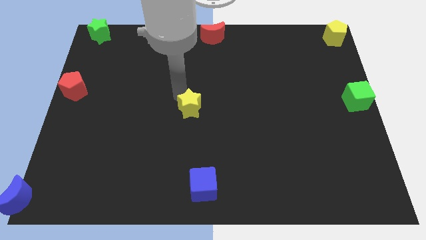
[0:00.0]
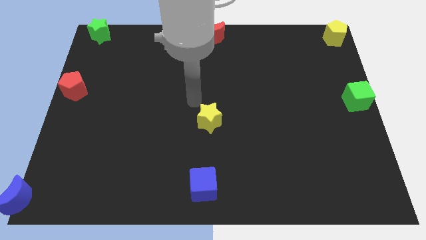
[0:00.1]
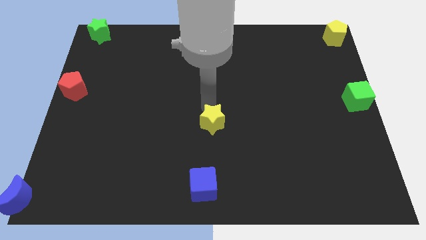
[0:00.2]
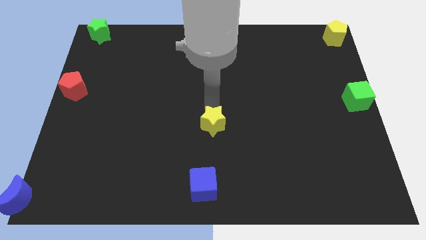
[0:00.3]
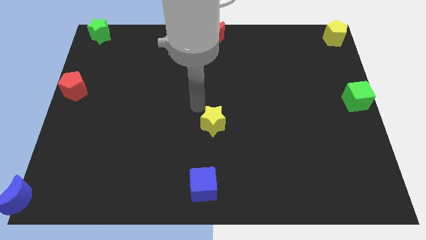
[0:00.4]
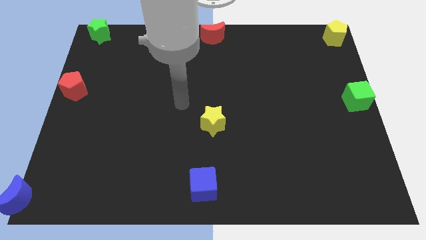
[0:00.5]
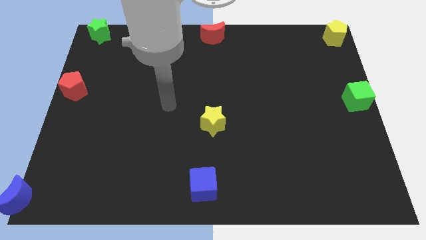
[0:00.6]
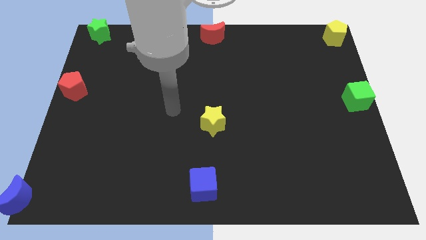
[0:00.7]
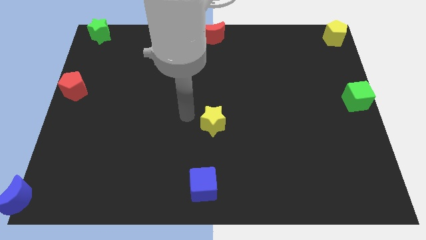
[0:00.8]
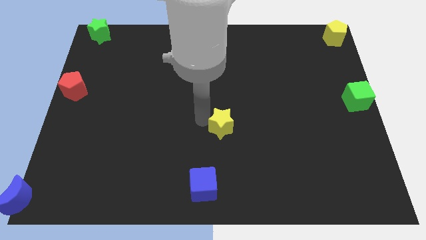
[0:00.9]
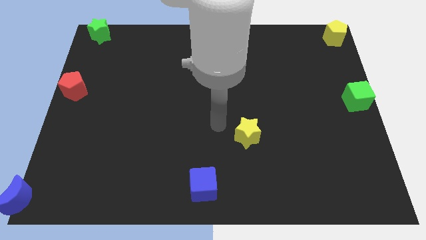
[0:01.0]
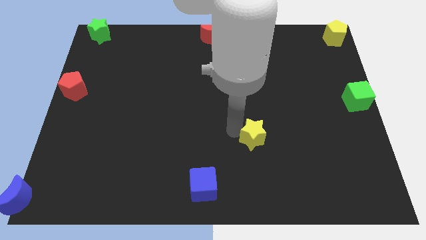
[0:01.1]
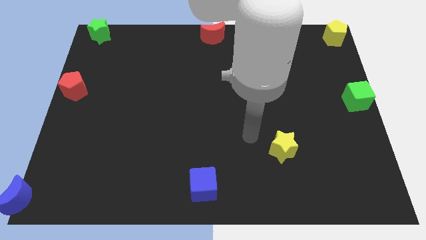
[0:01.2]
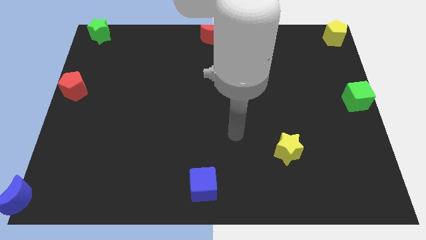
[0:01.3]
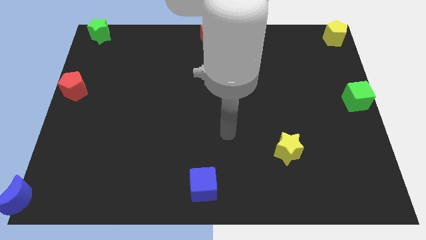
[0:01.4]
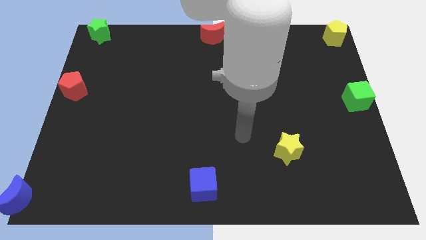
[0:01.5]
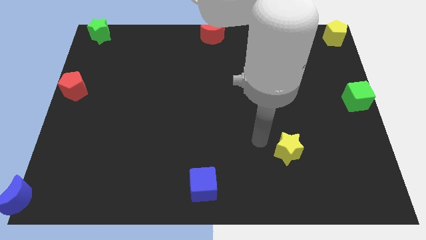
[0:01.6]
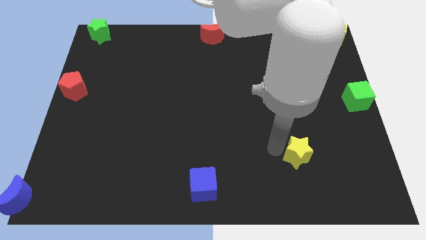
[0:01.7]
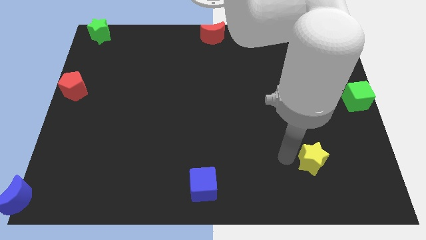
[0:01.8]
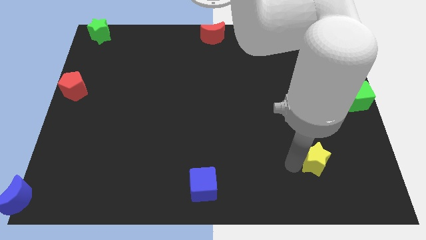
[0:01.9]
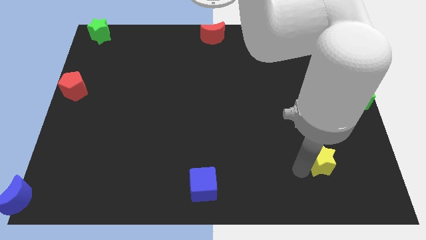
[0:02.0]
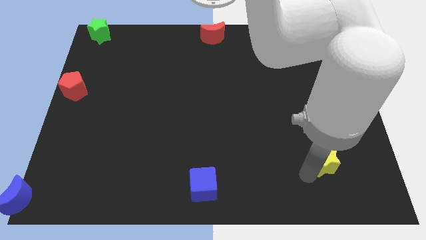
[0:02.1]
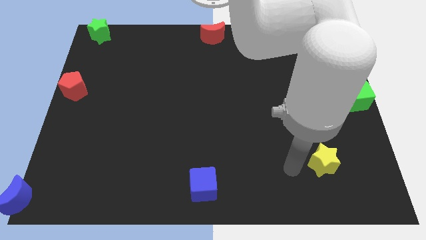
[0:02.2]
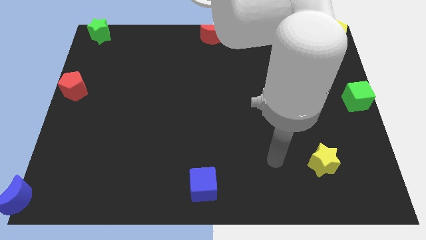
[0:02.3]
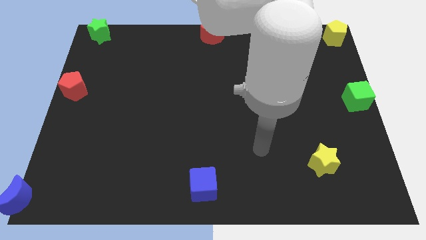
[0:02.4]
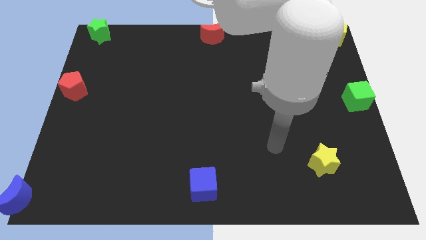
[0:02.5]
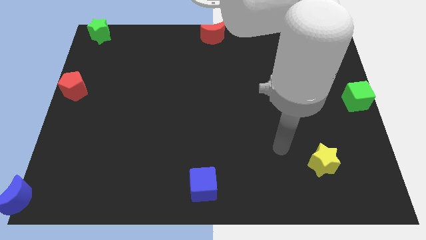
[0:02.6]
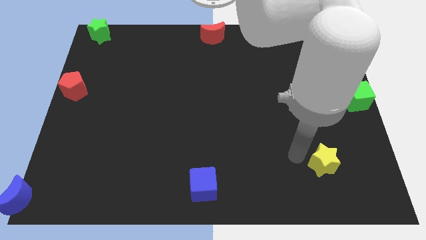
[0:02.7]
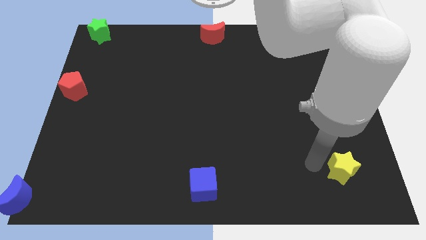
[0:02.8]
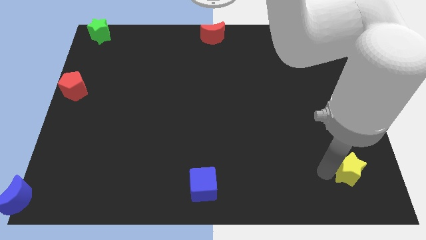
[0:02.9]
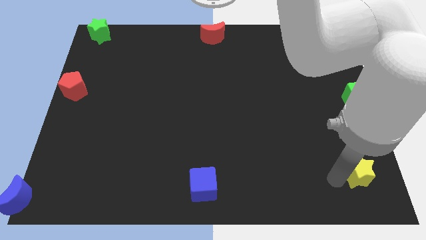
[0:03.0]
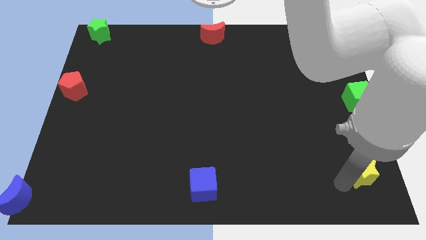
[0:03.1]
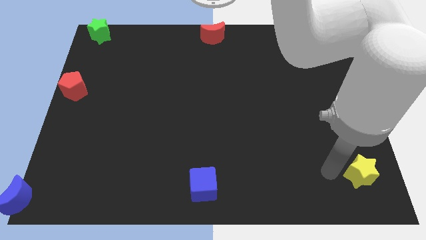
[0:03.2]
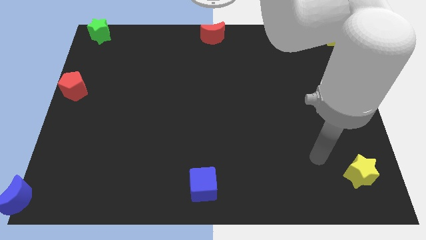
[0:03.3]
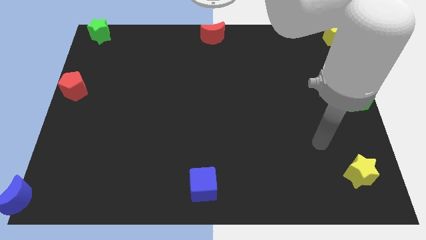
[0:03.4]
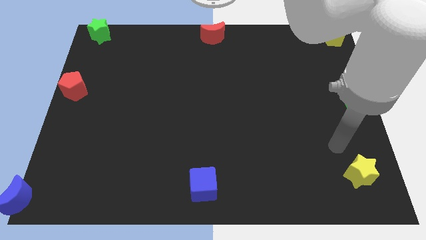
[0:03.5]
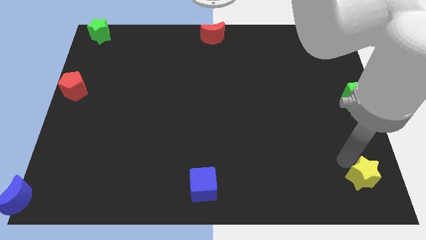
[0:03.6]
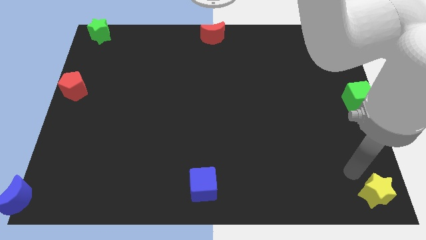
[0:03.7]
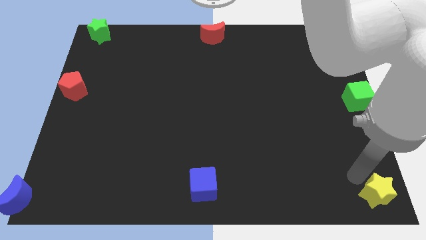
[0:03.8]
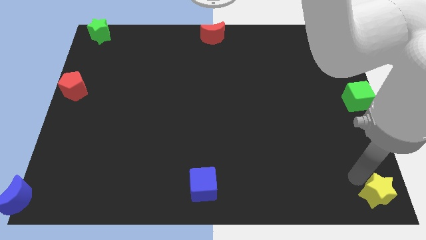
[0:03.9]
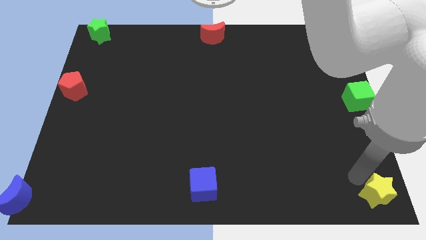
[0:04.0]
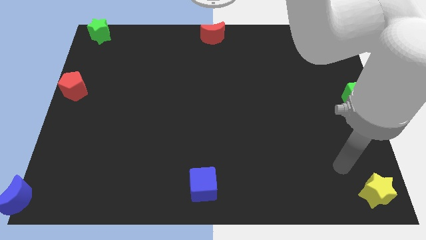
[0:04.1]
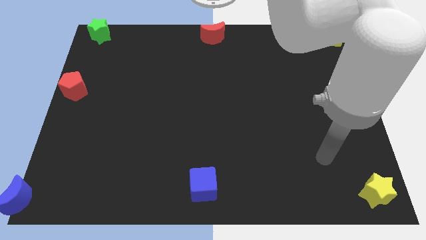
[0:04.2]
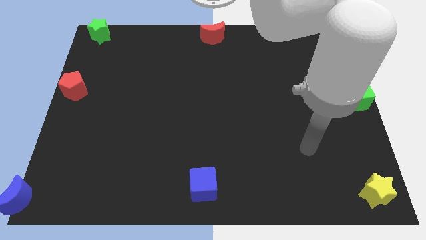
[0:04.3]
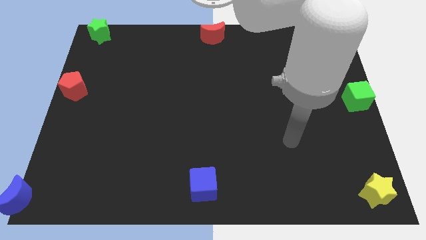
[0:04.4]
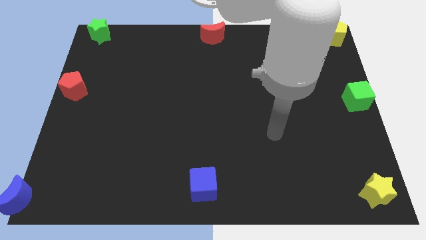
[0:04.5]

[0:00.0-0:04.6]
move the yellow star to the bottom right corner of the board

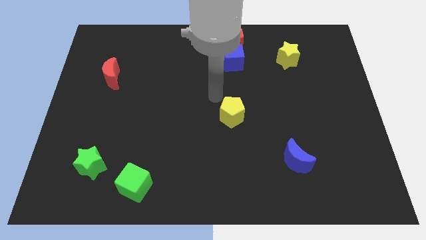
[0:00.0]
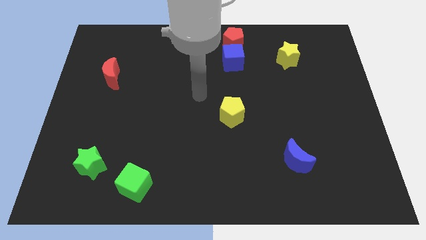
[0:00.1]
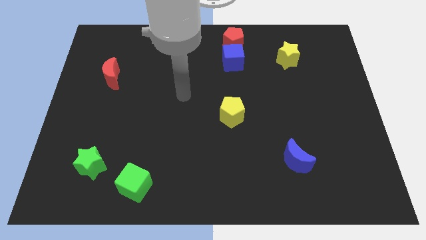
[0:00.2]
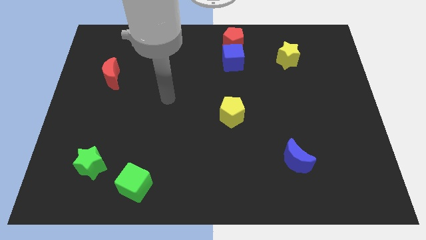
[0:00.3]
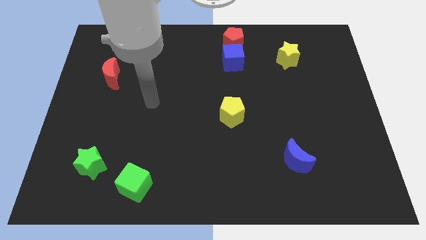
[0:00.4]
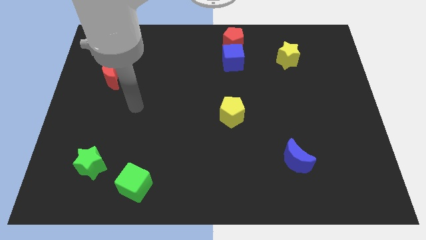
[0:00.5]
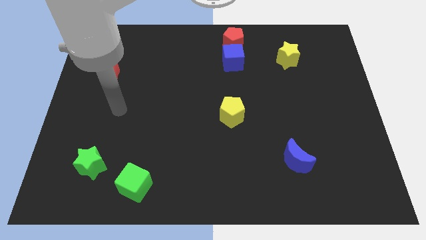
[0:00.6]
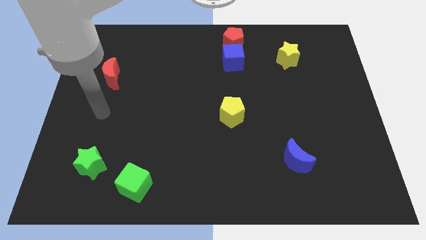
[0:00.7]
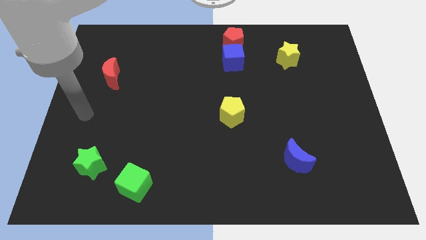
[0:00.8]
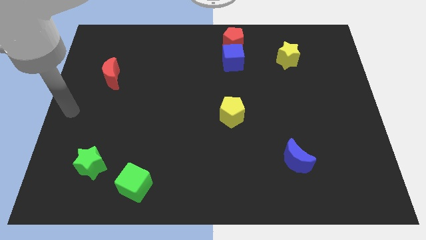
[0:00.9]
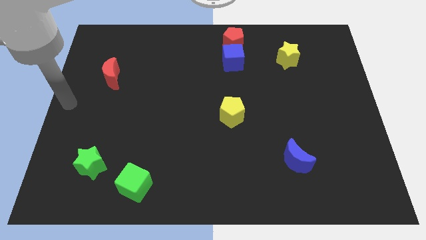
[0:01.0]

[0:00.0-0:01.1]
place your arm at the left center of the board

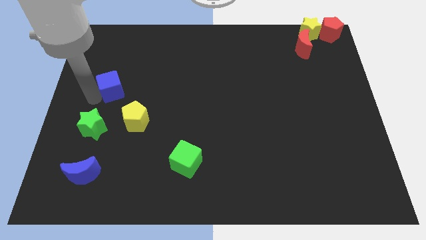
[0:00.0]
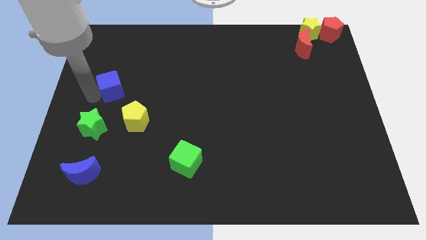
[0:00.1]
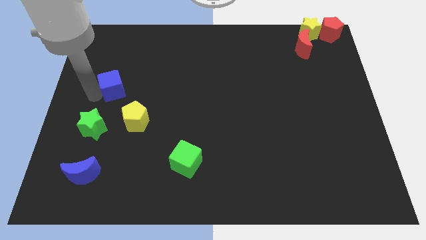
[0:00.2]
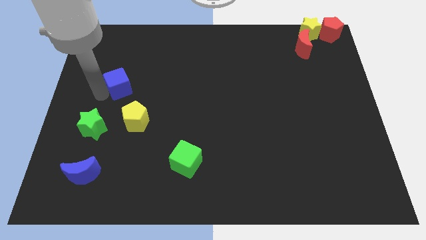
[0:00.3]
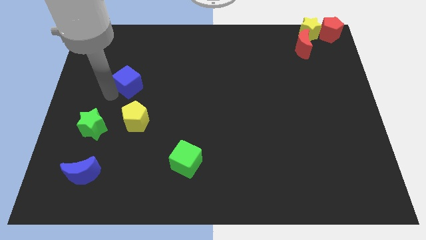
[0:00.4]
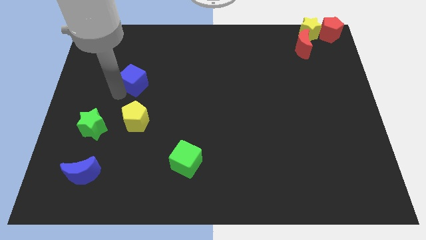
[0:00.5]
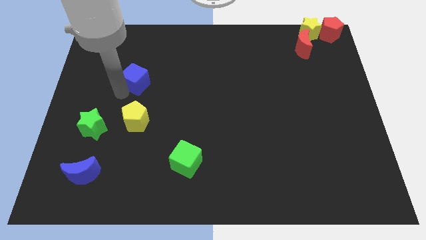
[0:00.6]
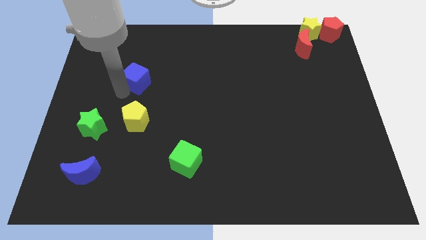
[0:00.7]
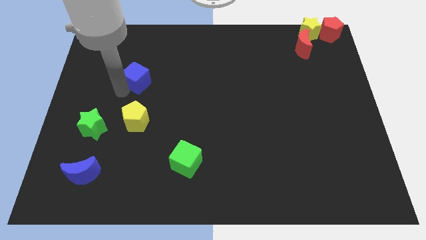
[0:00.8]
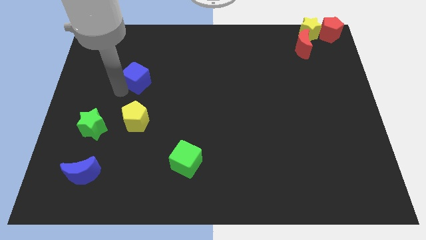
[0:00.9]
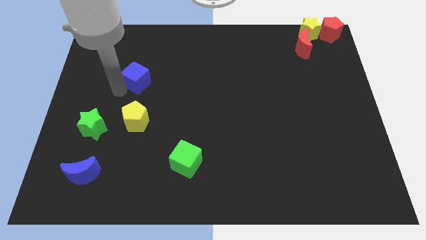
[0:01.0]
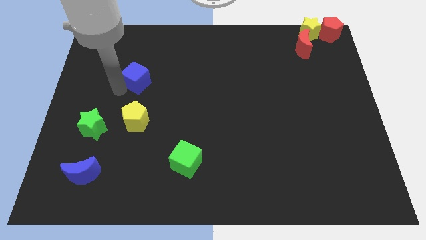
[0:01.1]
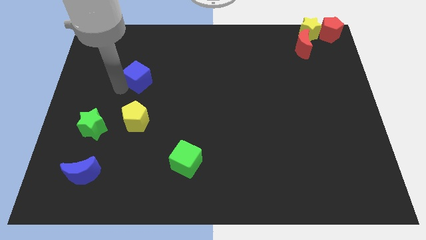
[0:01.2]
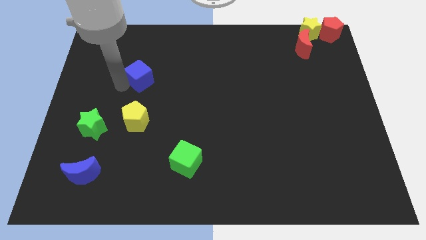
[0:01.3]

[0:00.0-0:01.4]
push the blue cube slightly to top side of the board

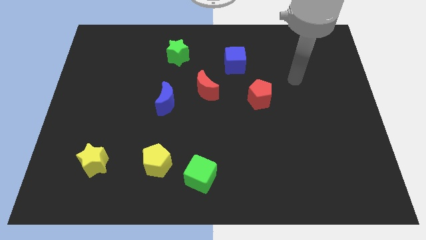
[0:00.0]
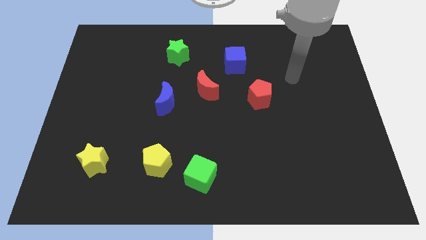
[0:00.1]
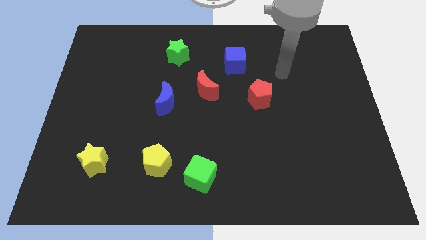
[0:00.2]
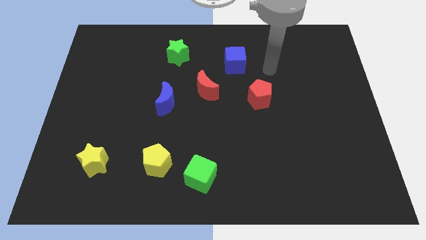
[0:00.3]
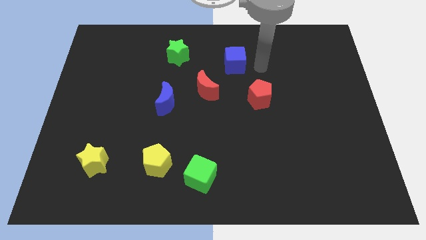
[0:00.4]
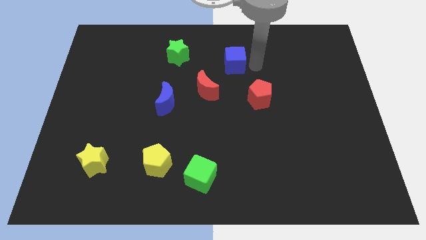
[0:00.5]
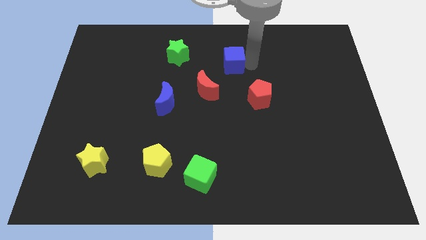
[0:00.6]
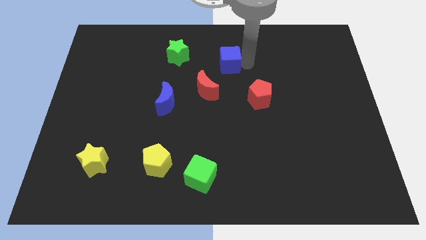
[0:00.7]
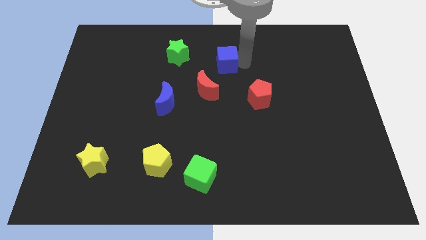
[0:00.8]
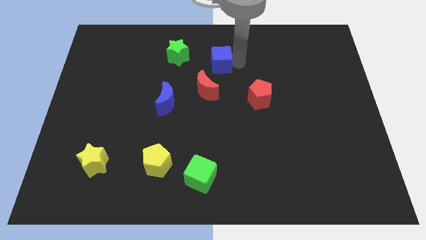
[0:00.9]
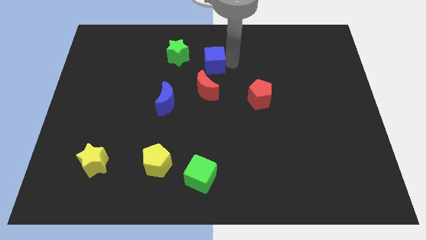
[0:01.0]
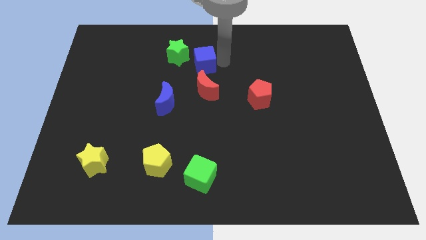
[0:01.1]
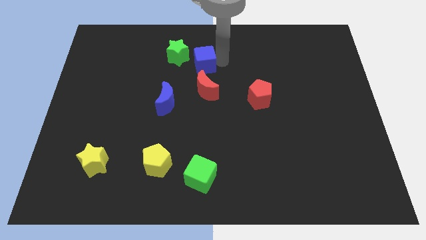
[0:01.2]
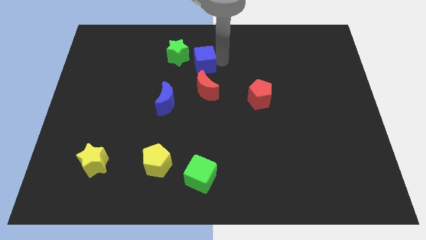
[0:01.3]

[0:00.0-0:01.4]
push the blue cube to the top of the red crescent

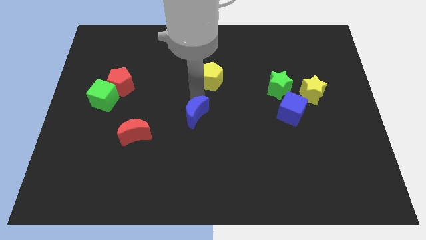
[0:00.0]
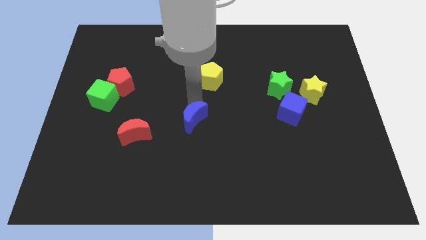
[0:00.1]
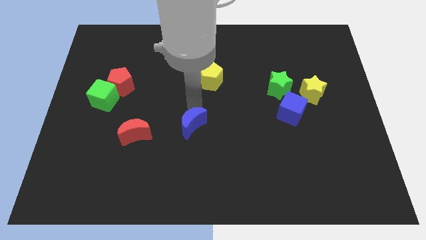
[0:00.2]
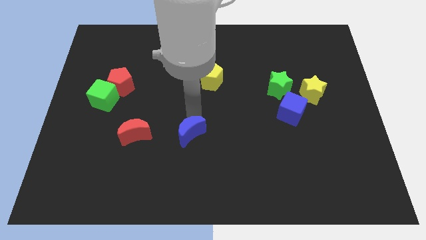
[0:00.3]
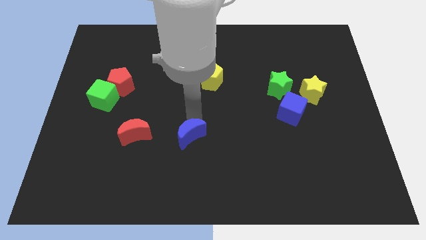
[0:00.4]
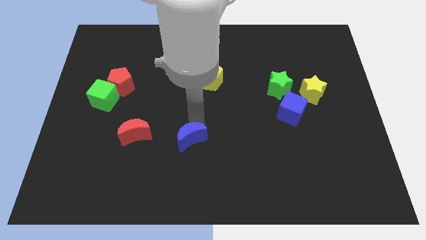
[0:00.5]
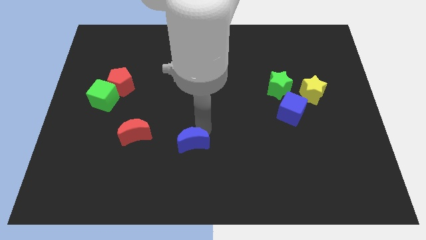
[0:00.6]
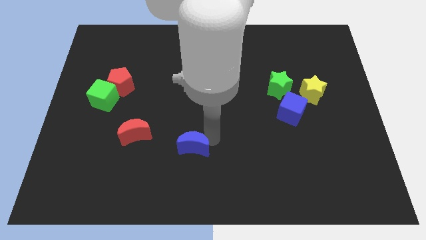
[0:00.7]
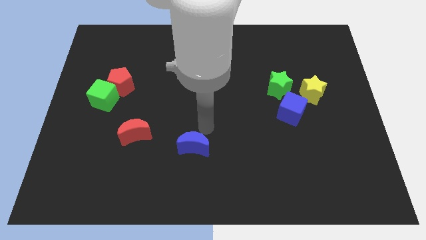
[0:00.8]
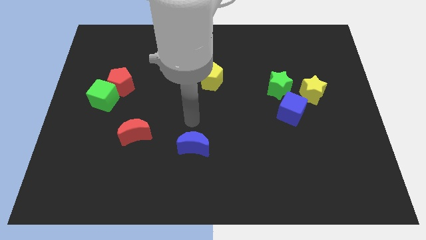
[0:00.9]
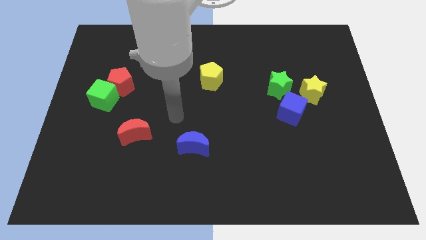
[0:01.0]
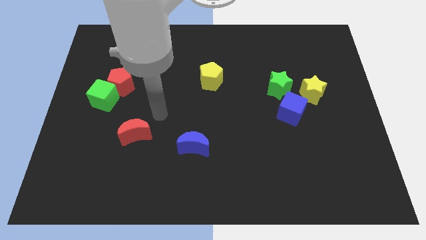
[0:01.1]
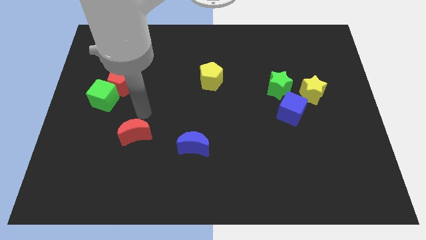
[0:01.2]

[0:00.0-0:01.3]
move the blue moon vertical to the bottom right to the red crescent
